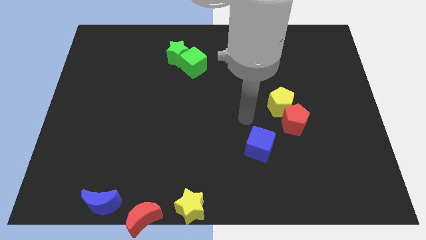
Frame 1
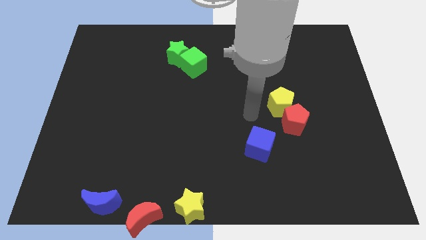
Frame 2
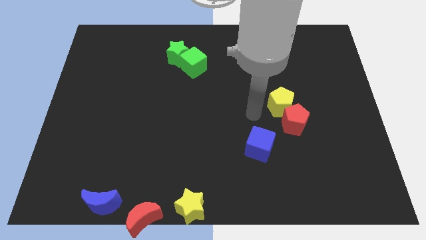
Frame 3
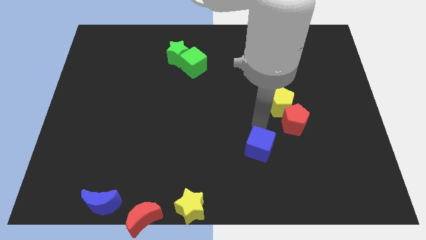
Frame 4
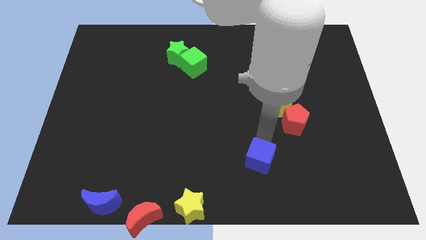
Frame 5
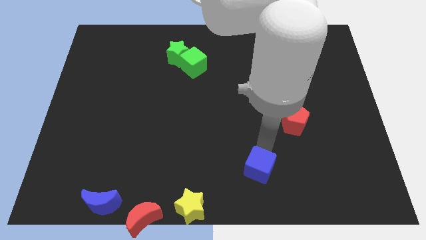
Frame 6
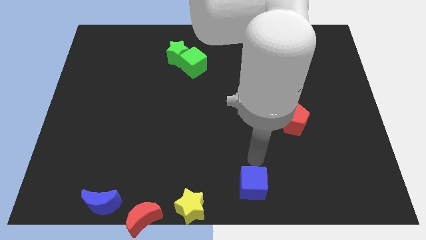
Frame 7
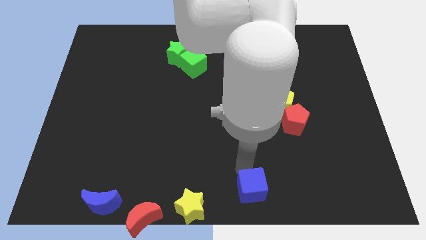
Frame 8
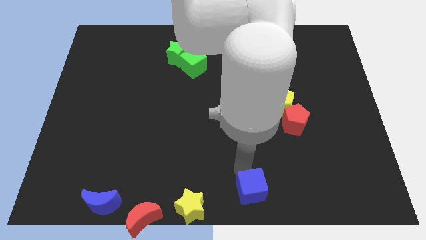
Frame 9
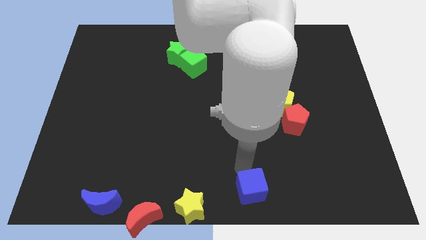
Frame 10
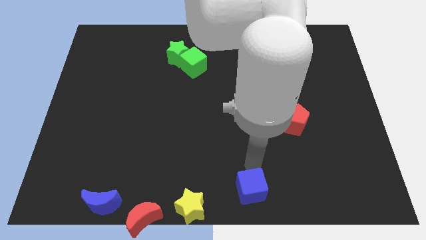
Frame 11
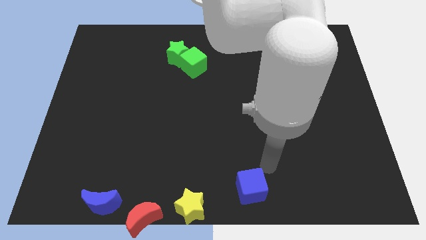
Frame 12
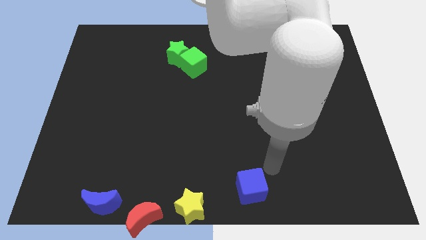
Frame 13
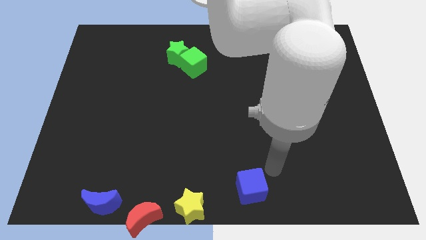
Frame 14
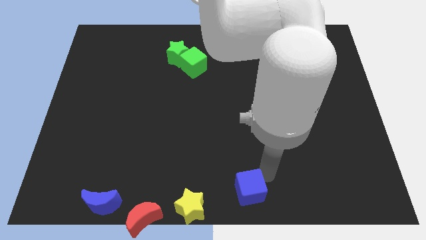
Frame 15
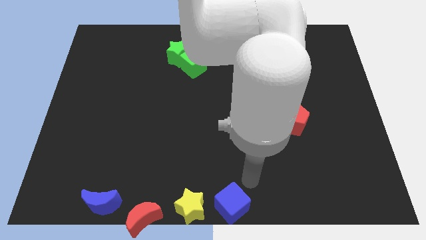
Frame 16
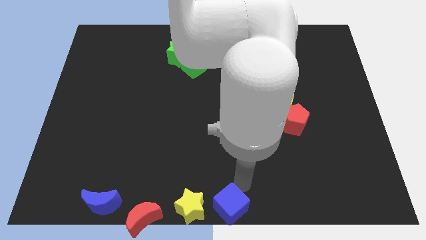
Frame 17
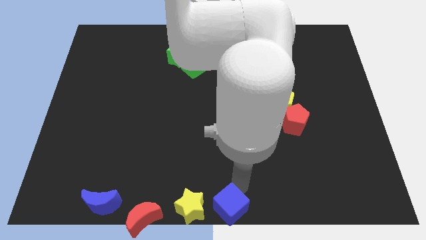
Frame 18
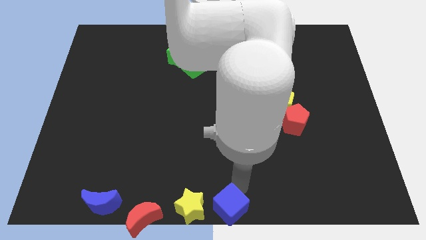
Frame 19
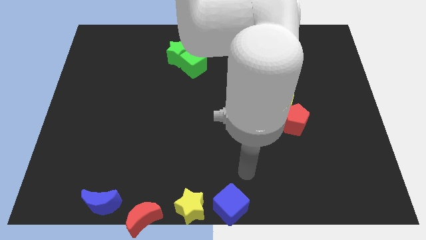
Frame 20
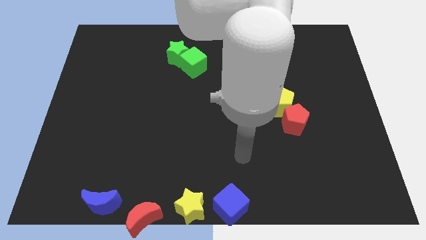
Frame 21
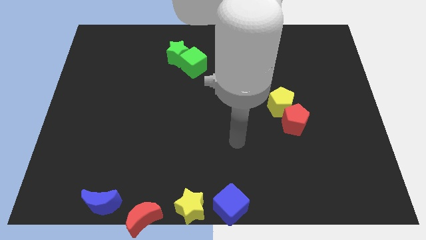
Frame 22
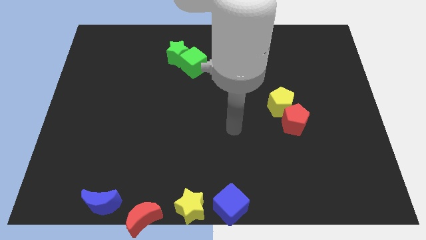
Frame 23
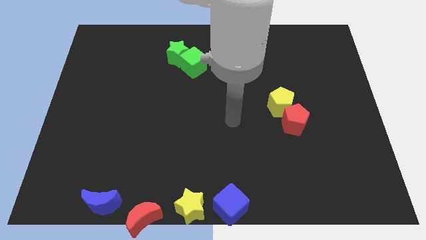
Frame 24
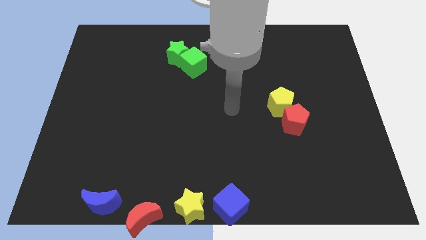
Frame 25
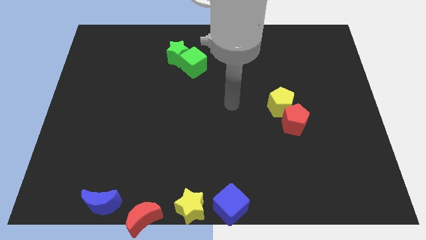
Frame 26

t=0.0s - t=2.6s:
push the blue cube to the right of the yellow star

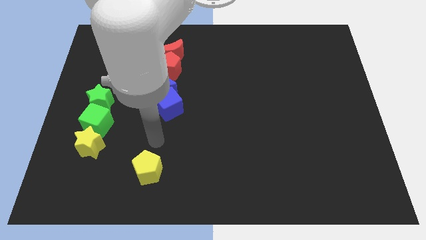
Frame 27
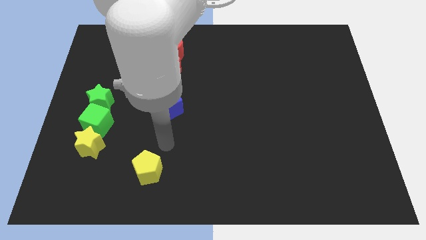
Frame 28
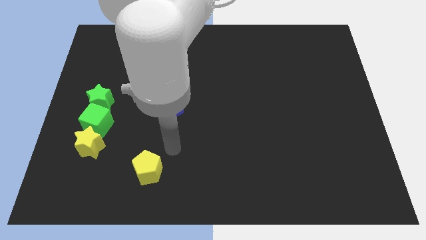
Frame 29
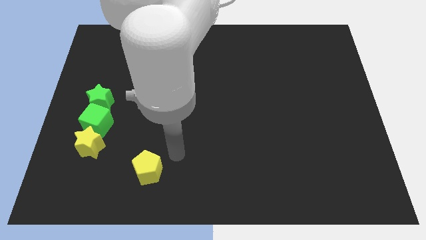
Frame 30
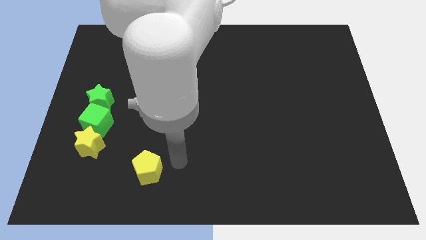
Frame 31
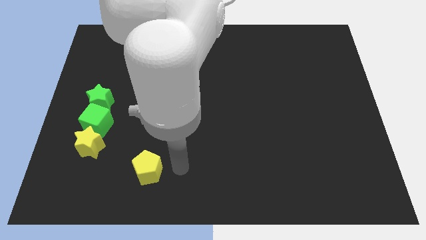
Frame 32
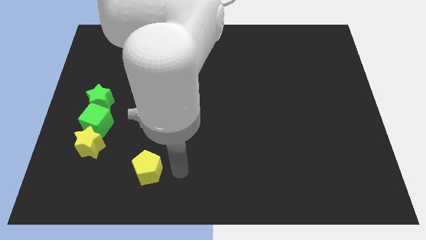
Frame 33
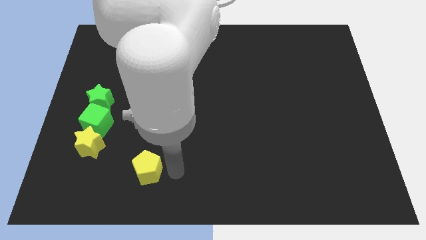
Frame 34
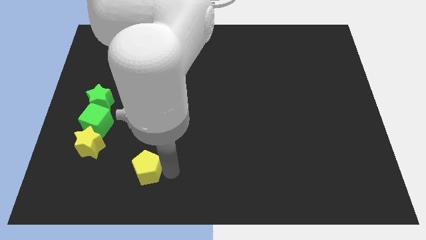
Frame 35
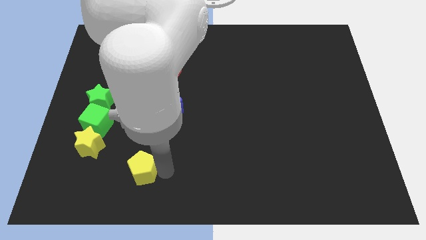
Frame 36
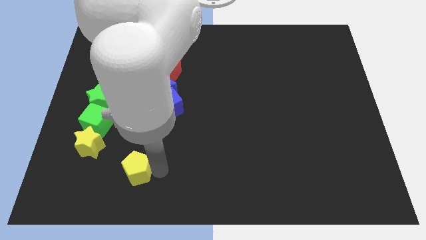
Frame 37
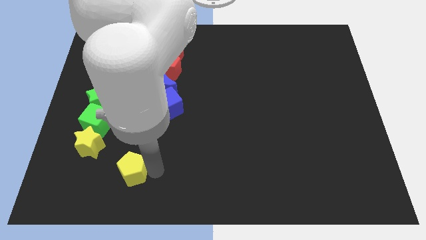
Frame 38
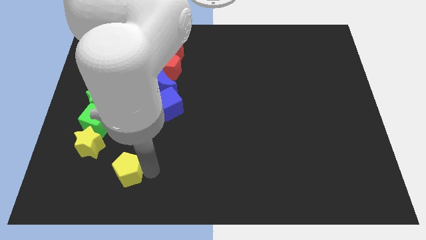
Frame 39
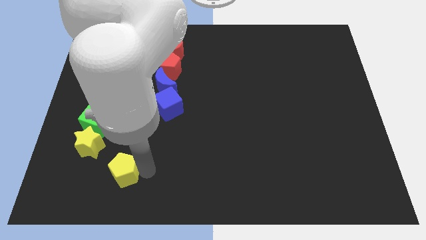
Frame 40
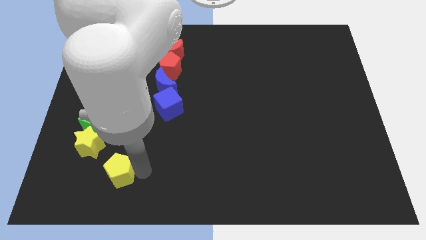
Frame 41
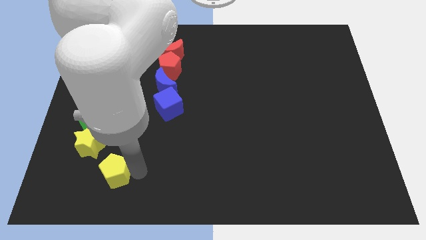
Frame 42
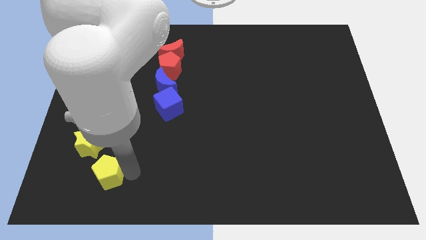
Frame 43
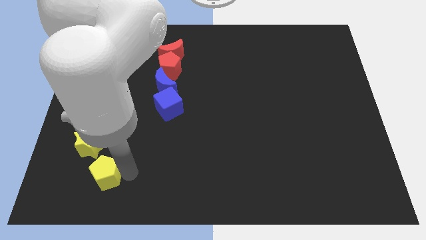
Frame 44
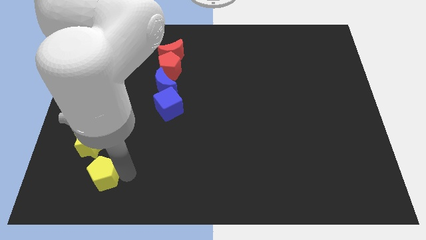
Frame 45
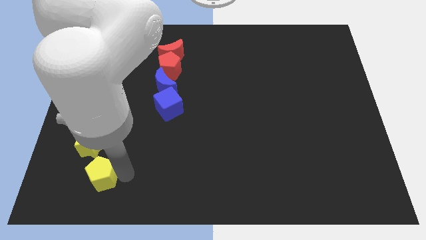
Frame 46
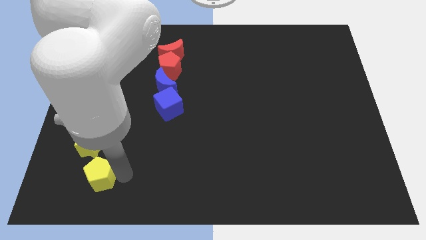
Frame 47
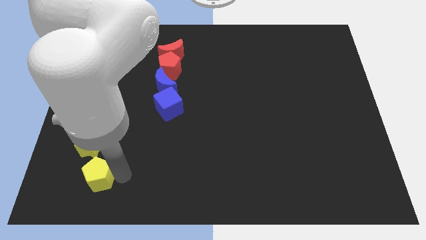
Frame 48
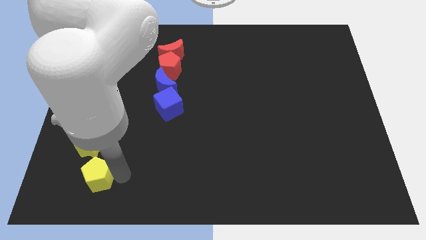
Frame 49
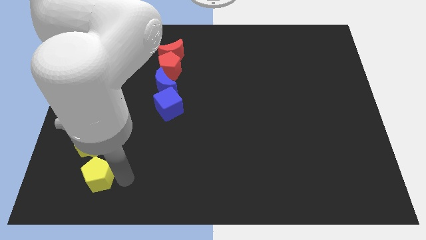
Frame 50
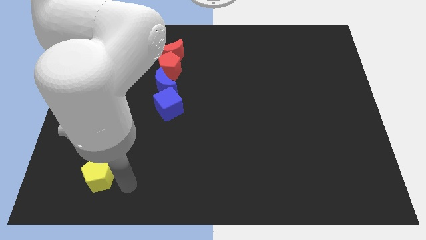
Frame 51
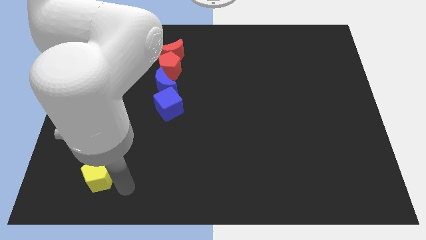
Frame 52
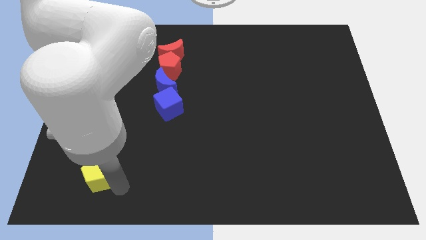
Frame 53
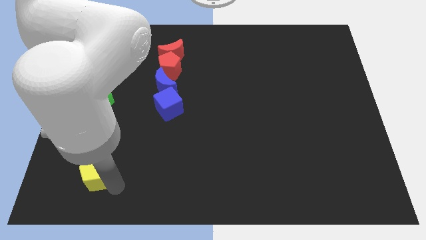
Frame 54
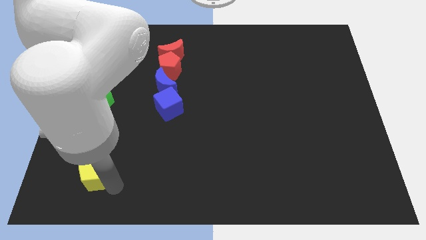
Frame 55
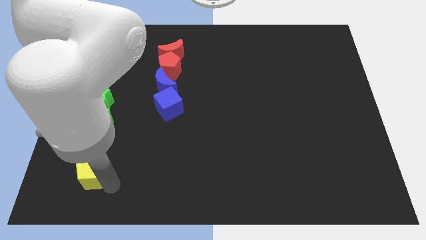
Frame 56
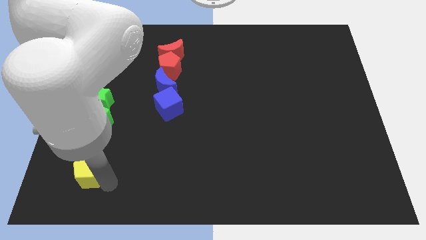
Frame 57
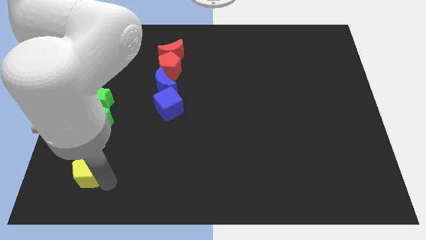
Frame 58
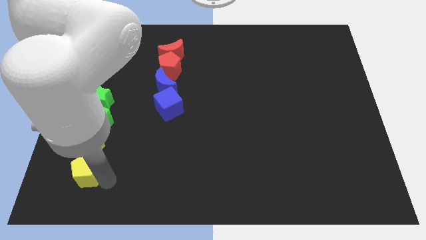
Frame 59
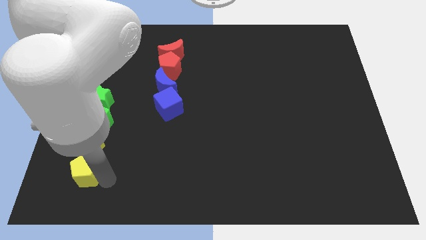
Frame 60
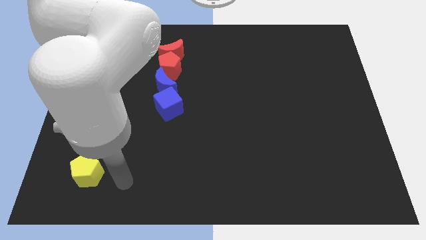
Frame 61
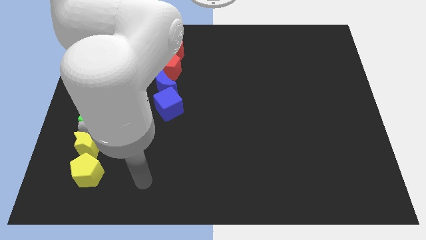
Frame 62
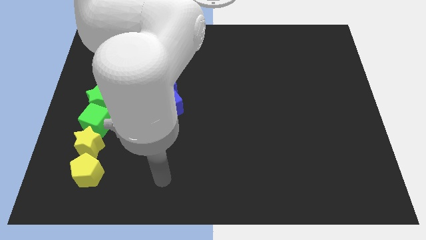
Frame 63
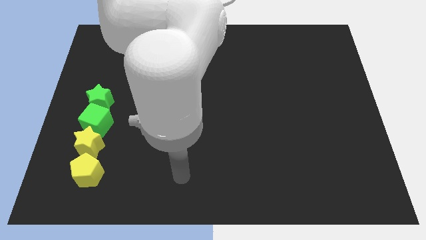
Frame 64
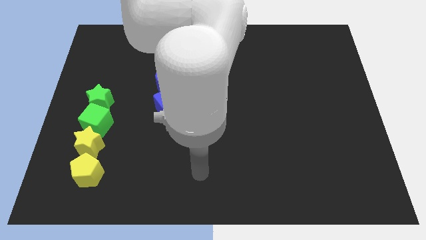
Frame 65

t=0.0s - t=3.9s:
put the yellow pentagon to the bottom side of the yellow star

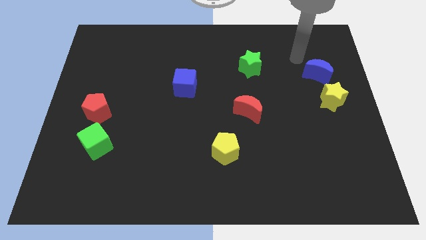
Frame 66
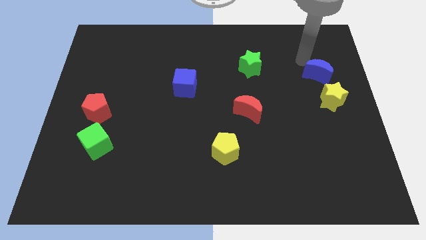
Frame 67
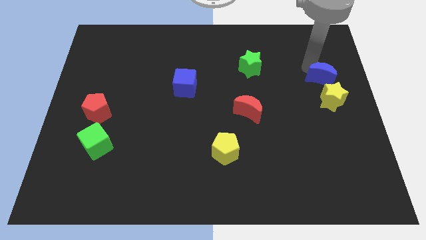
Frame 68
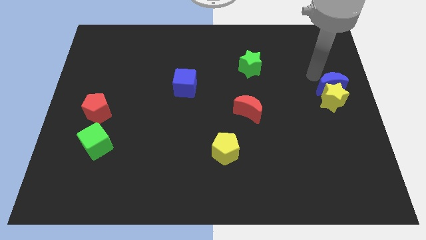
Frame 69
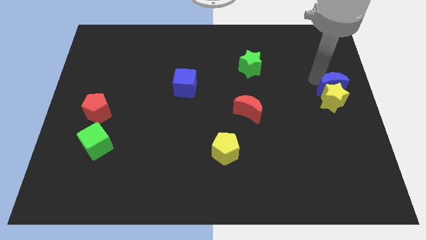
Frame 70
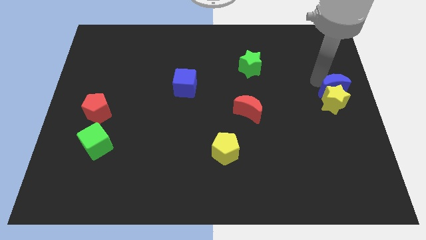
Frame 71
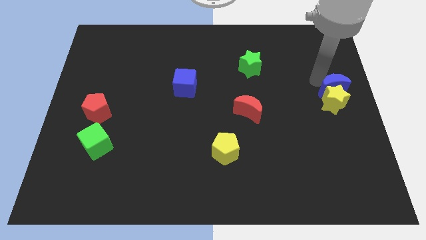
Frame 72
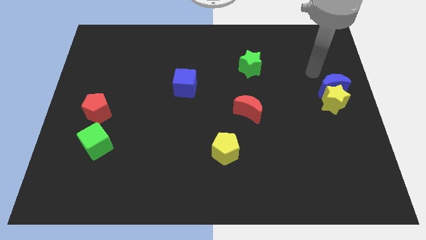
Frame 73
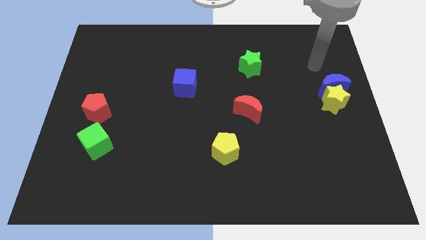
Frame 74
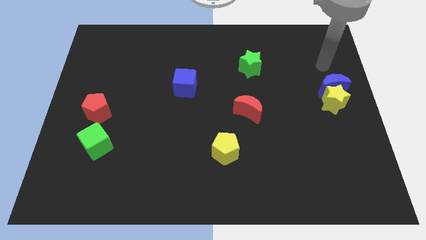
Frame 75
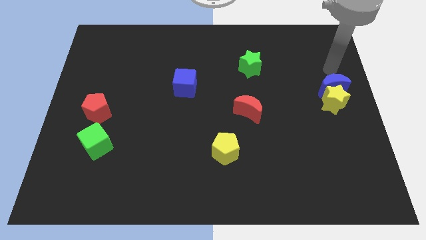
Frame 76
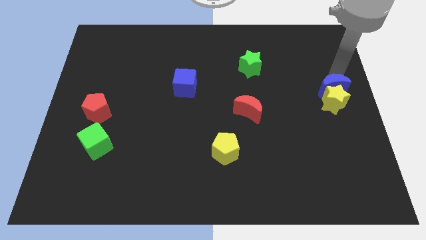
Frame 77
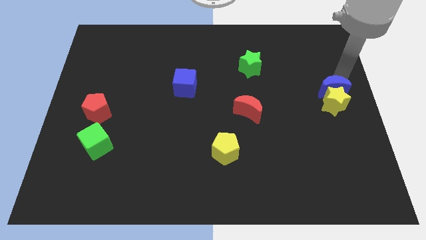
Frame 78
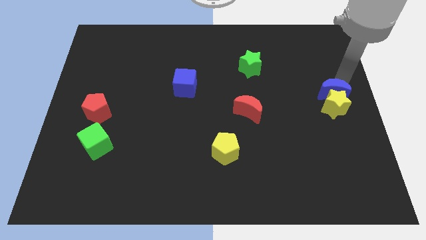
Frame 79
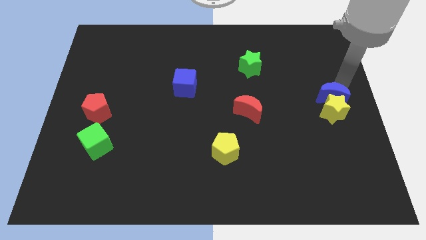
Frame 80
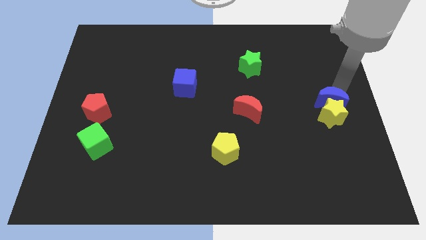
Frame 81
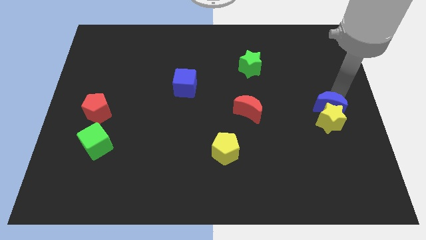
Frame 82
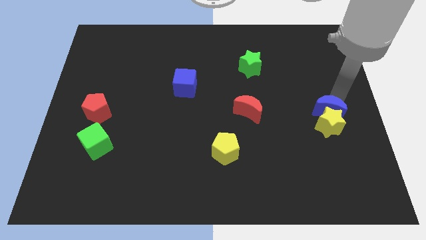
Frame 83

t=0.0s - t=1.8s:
move the blue crescent into the yellow star

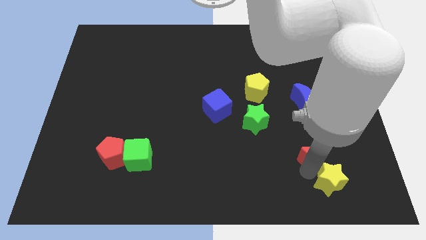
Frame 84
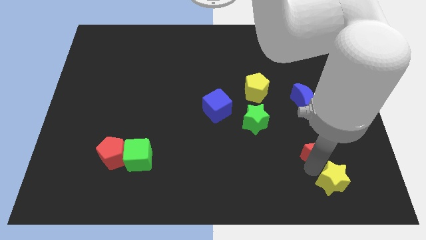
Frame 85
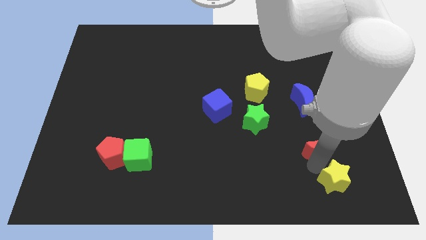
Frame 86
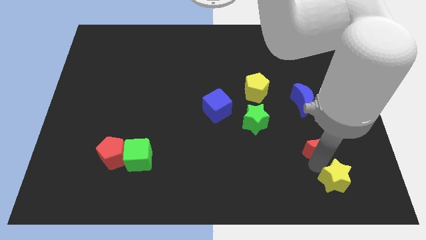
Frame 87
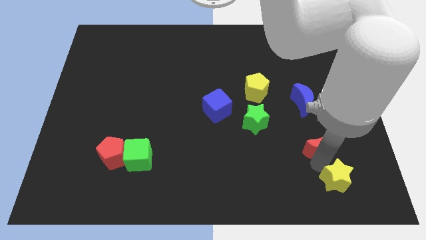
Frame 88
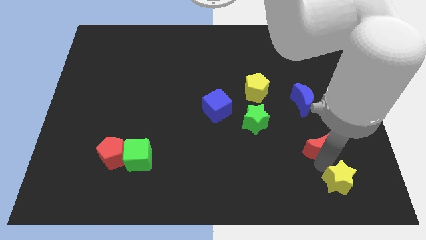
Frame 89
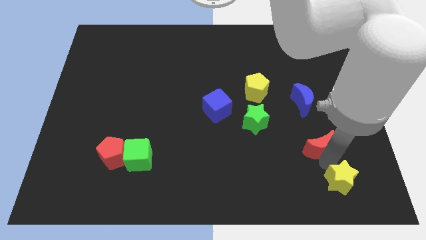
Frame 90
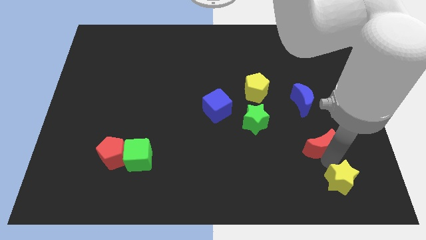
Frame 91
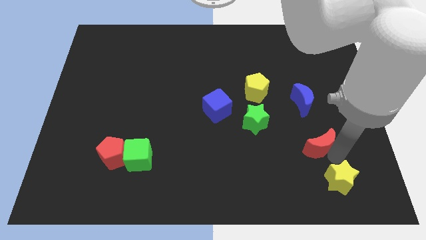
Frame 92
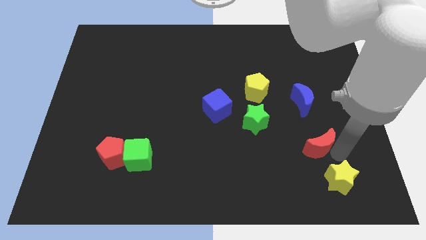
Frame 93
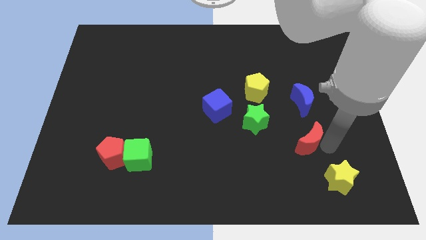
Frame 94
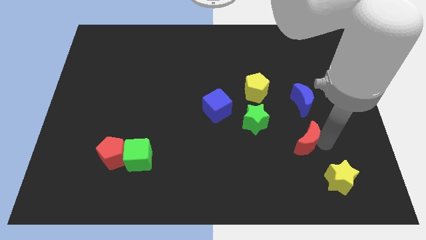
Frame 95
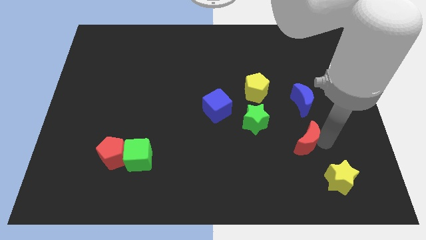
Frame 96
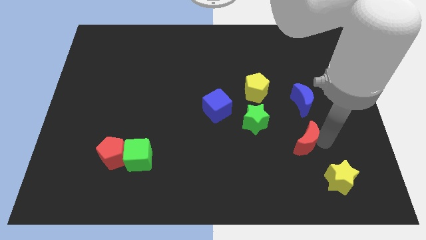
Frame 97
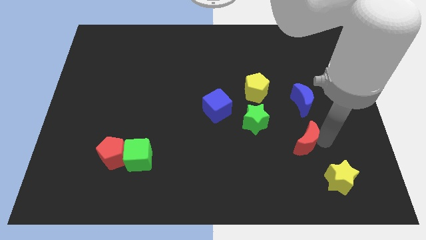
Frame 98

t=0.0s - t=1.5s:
move the red crescent below the blue crescent
